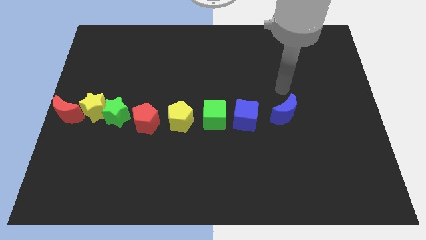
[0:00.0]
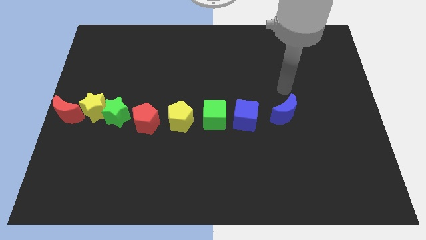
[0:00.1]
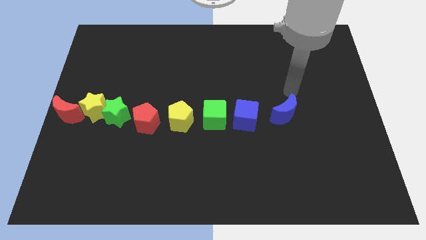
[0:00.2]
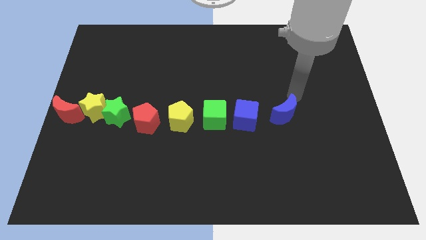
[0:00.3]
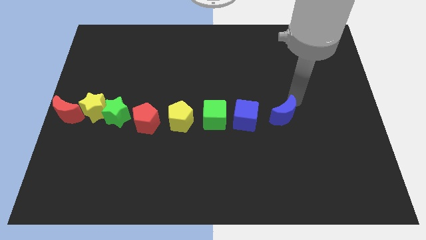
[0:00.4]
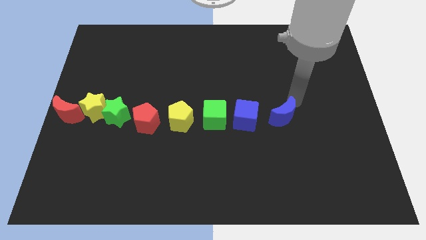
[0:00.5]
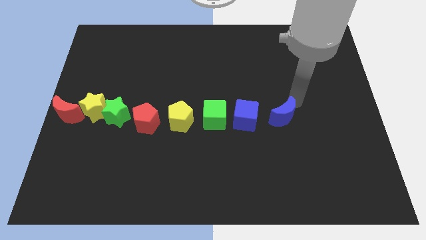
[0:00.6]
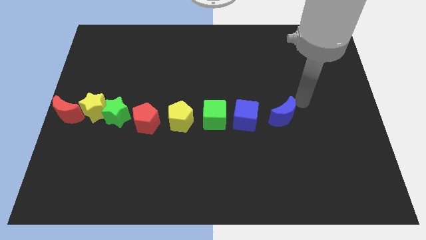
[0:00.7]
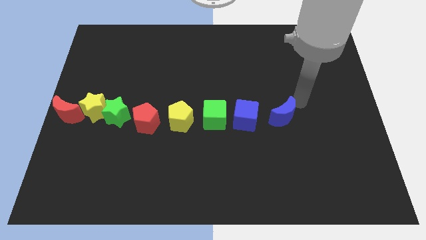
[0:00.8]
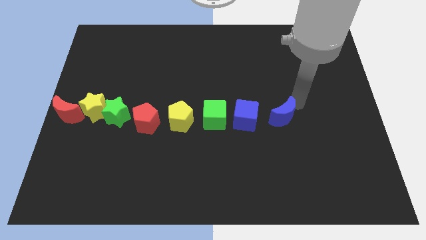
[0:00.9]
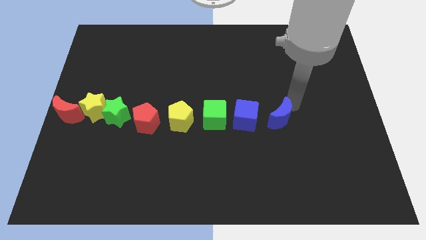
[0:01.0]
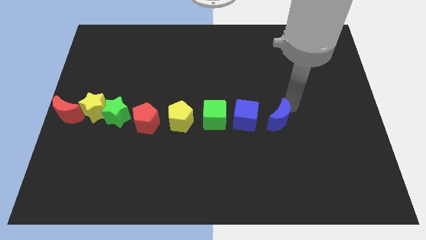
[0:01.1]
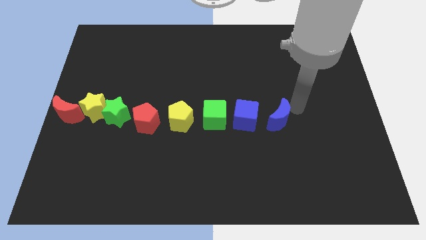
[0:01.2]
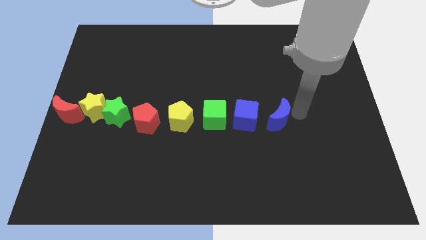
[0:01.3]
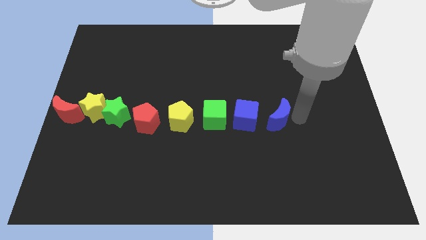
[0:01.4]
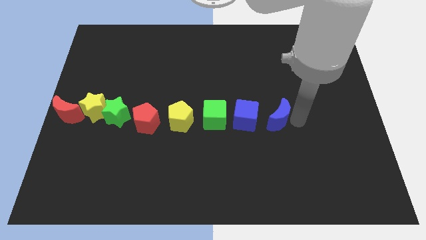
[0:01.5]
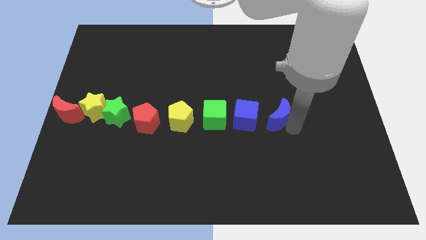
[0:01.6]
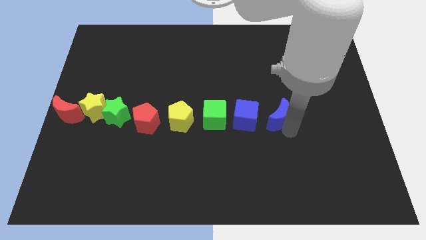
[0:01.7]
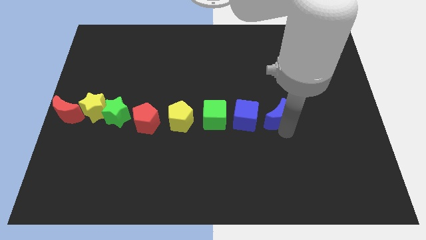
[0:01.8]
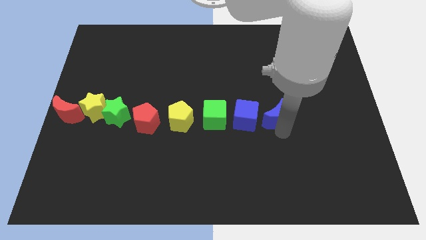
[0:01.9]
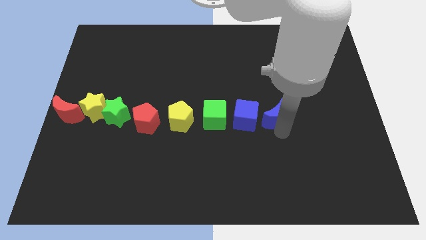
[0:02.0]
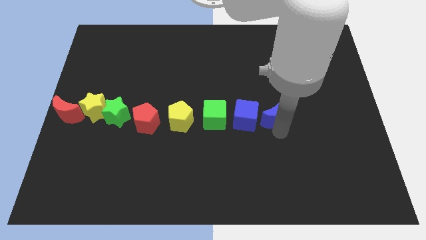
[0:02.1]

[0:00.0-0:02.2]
slightly touch the blue moon

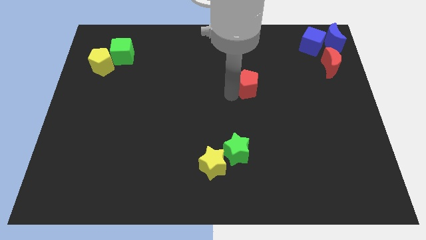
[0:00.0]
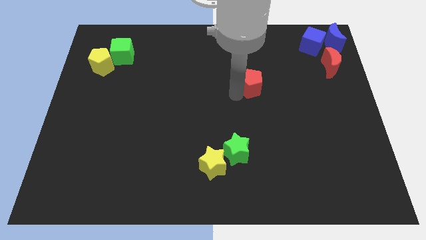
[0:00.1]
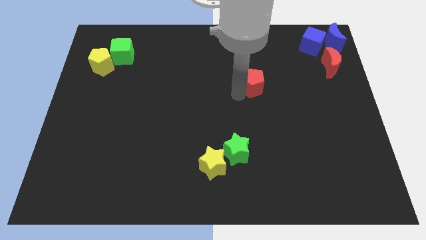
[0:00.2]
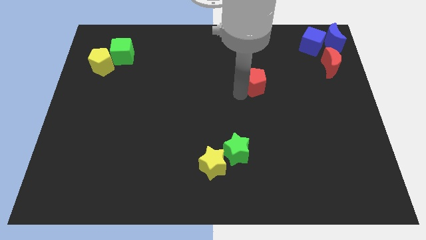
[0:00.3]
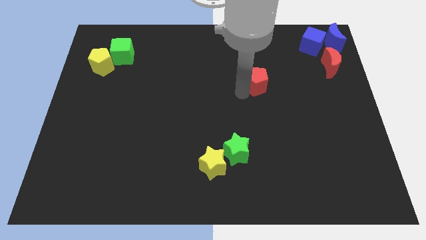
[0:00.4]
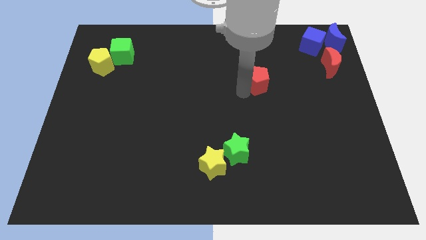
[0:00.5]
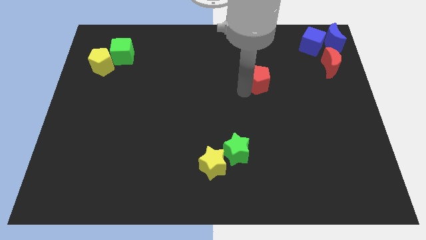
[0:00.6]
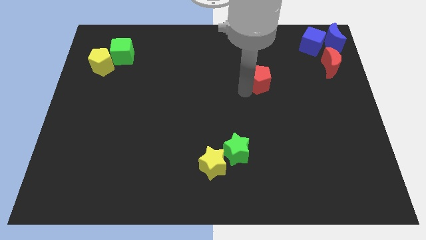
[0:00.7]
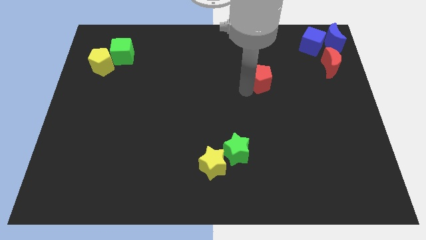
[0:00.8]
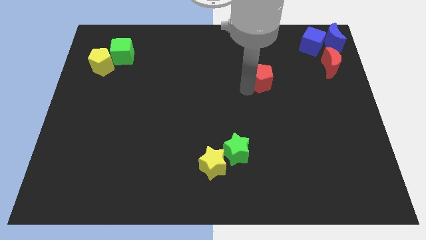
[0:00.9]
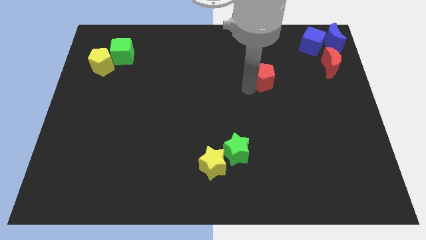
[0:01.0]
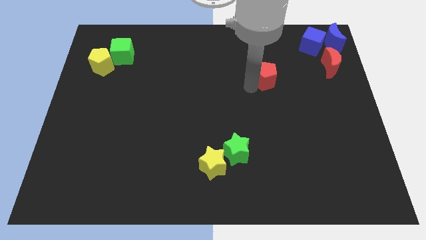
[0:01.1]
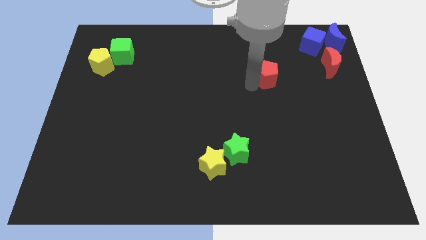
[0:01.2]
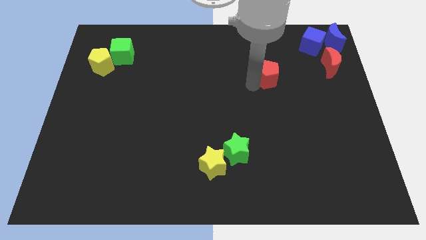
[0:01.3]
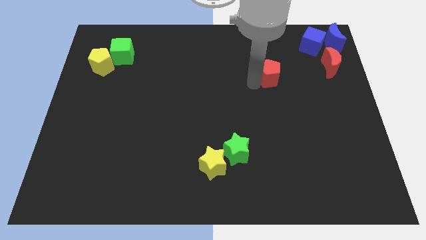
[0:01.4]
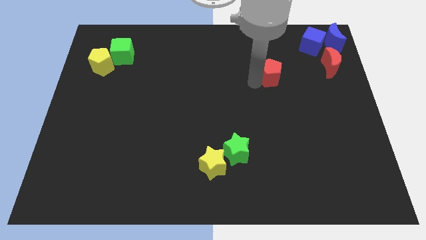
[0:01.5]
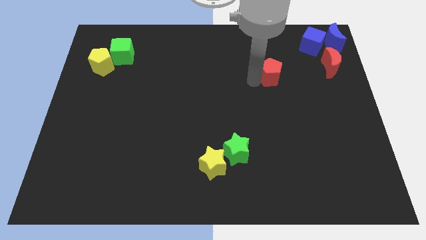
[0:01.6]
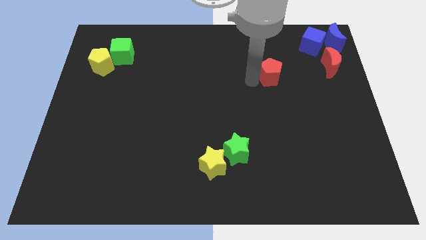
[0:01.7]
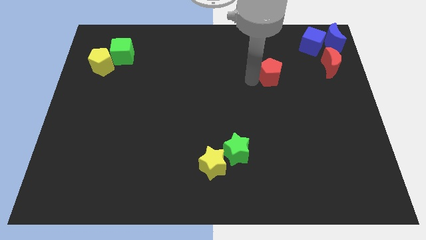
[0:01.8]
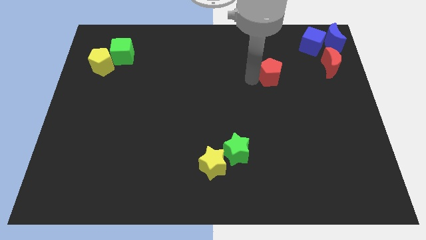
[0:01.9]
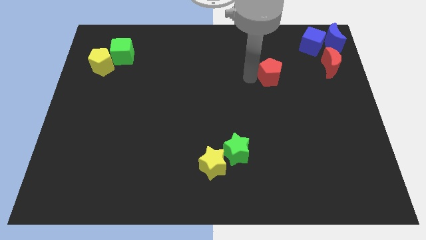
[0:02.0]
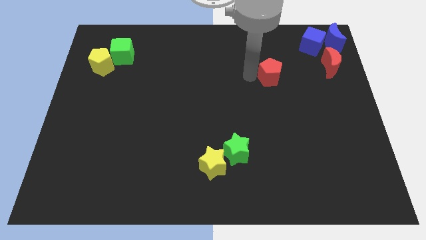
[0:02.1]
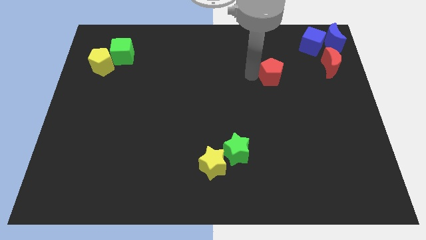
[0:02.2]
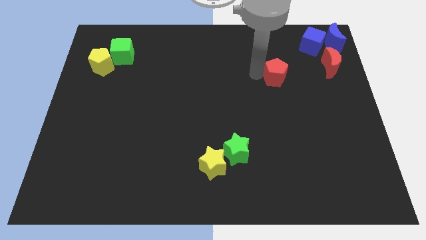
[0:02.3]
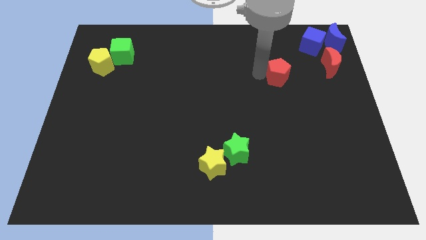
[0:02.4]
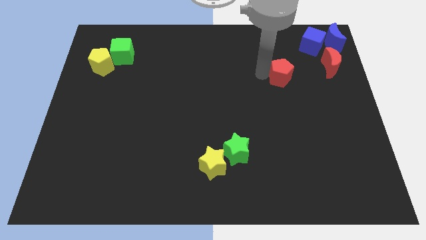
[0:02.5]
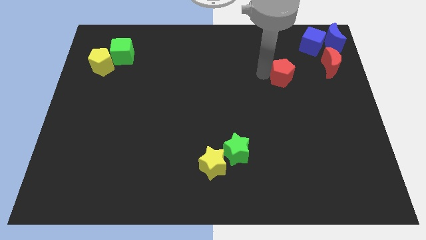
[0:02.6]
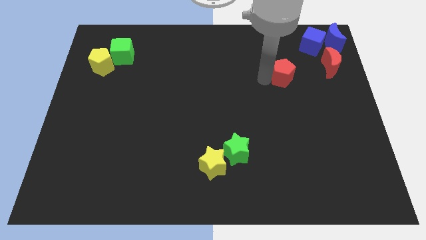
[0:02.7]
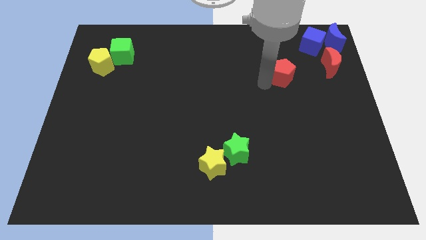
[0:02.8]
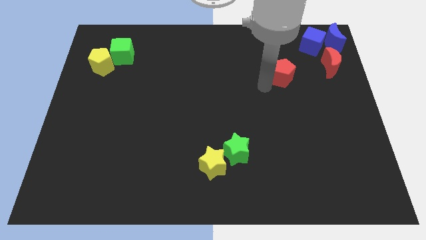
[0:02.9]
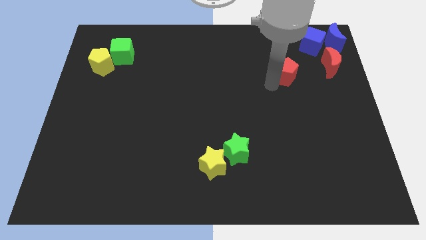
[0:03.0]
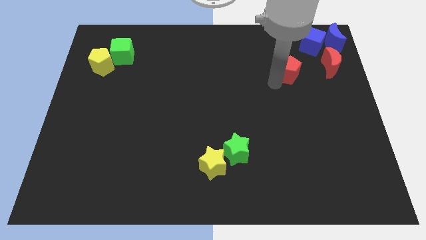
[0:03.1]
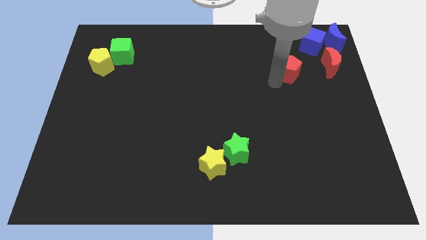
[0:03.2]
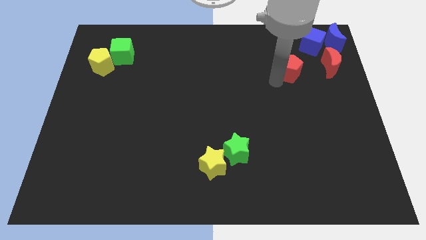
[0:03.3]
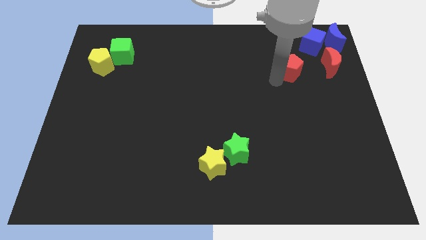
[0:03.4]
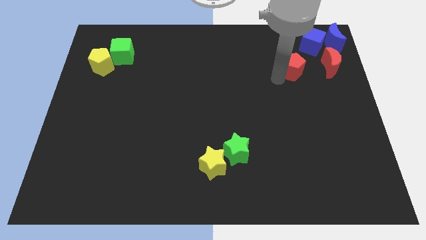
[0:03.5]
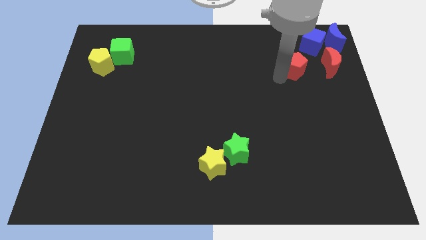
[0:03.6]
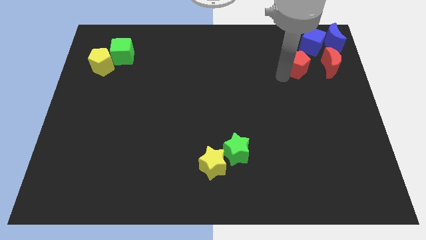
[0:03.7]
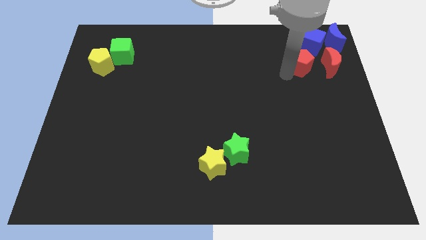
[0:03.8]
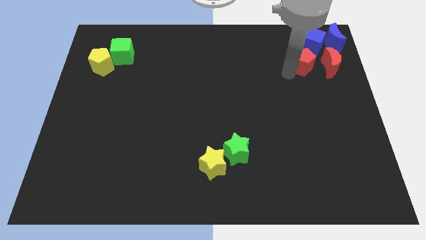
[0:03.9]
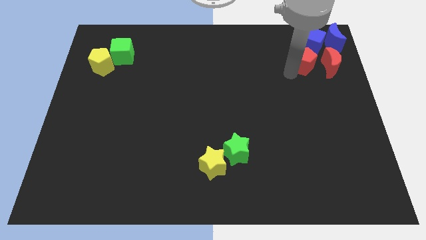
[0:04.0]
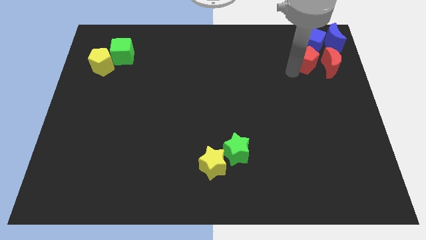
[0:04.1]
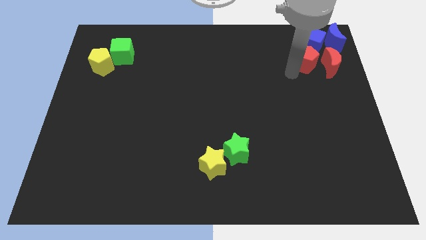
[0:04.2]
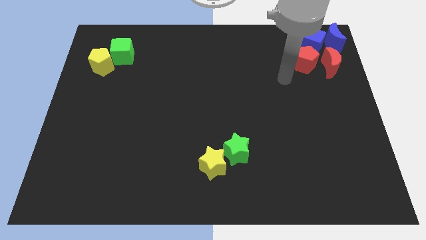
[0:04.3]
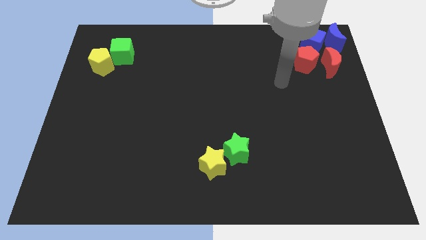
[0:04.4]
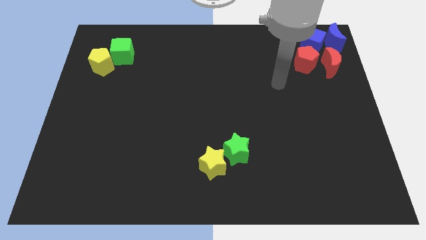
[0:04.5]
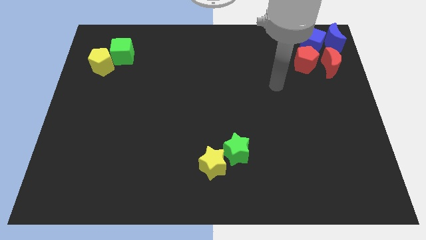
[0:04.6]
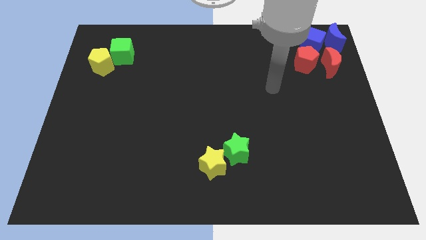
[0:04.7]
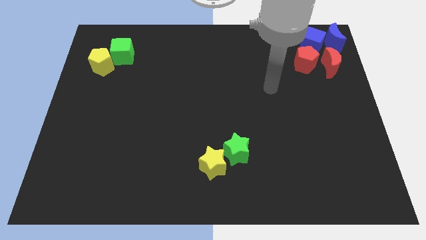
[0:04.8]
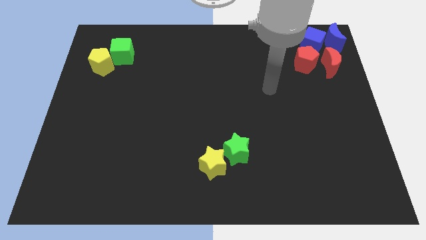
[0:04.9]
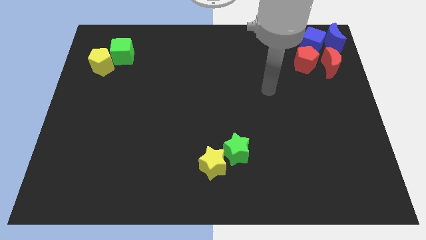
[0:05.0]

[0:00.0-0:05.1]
move red pentagon to the left of red moon

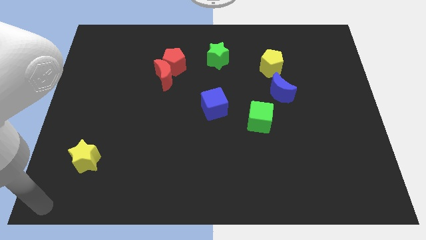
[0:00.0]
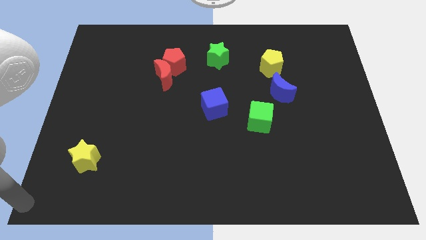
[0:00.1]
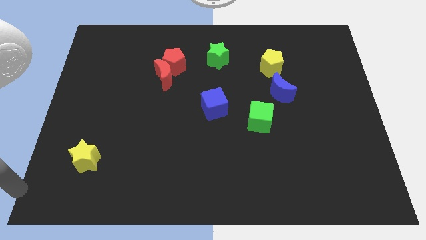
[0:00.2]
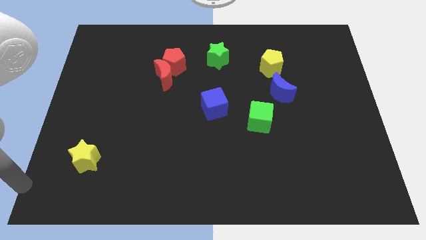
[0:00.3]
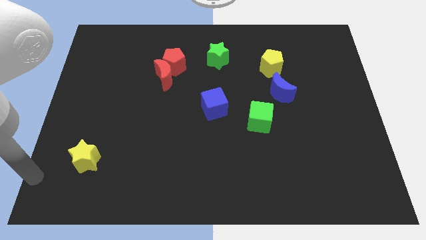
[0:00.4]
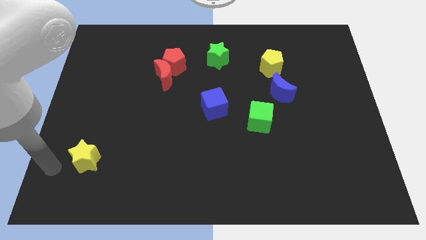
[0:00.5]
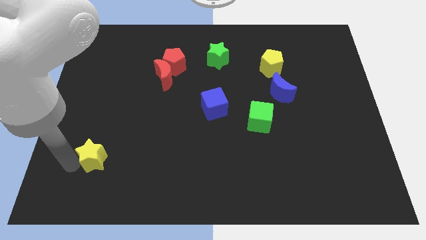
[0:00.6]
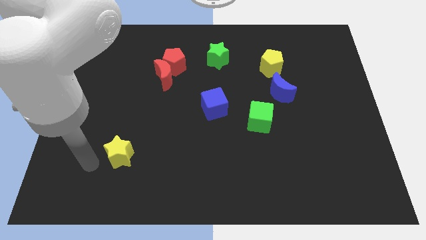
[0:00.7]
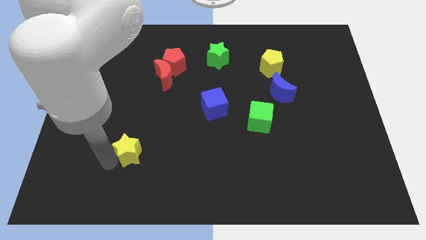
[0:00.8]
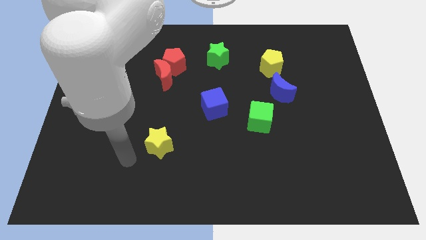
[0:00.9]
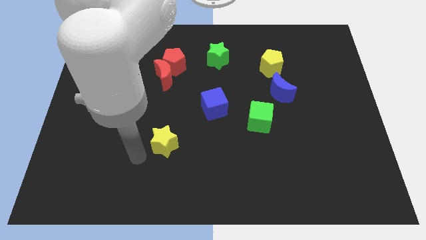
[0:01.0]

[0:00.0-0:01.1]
push the yellow star towards the center of the board

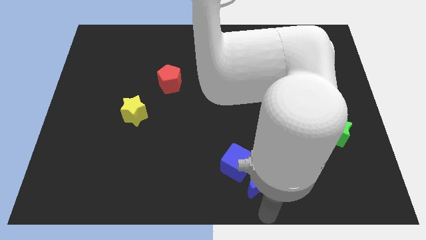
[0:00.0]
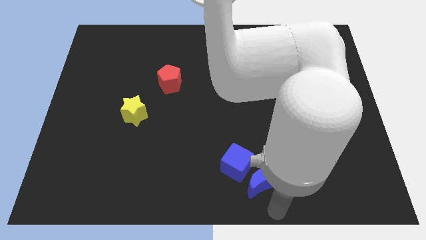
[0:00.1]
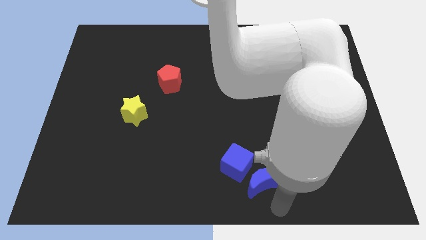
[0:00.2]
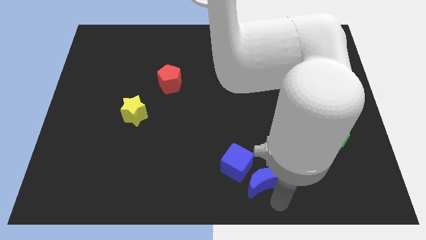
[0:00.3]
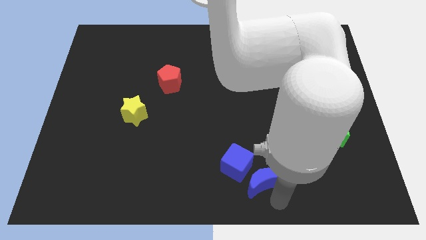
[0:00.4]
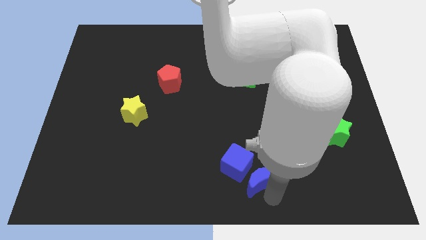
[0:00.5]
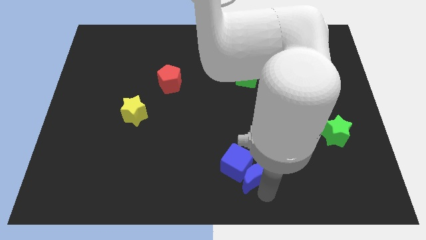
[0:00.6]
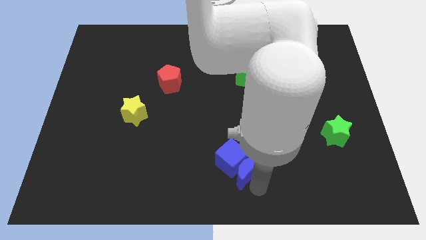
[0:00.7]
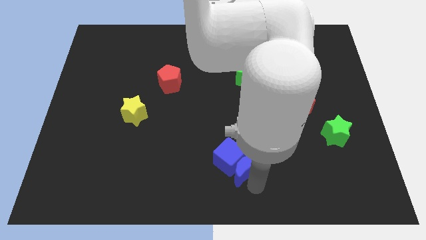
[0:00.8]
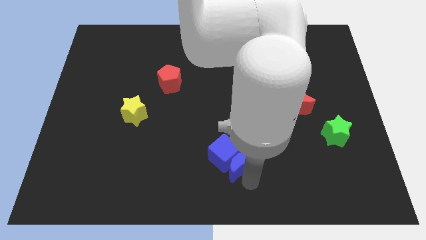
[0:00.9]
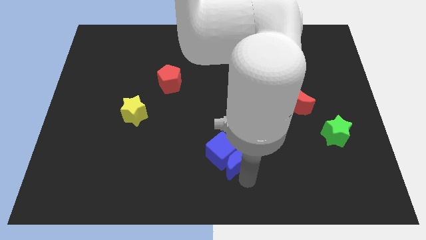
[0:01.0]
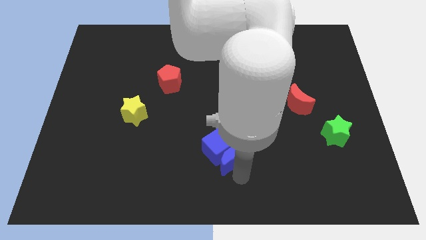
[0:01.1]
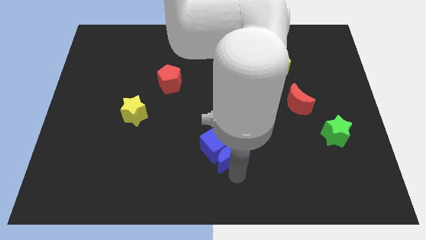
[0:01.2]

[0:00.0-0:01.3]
push the blue moon into the blue cube
